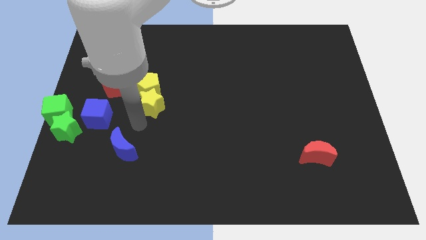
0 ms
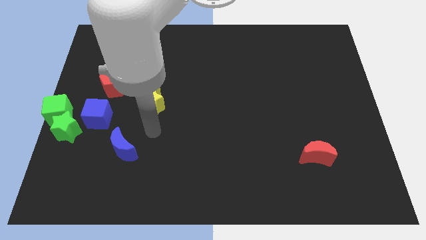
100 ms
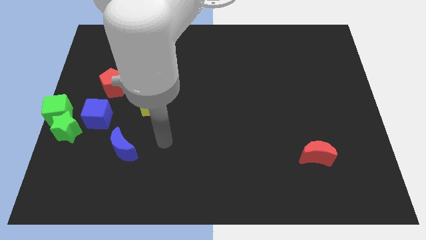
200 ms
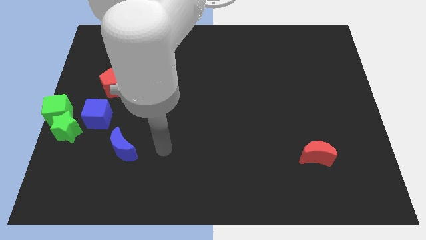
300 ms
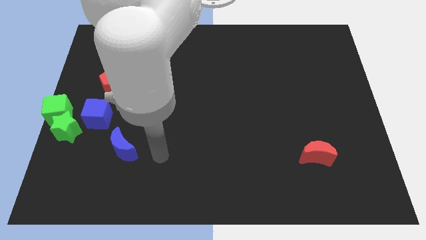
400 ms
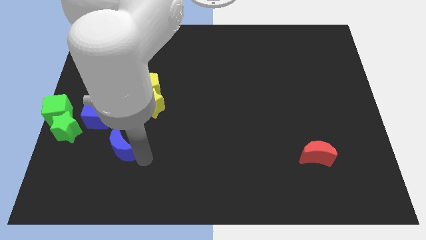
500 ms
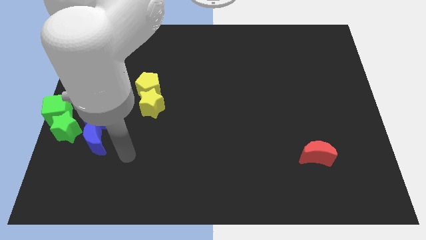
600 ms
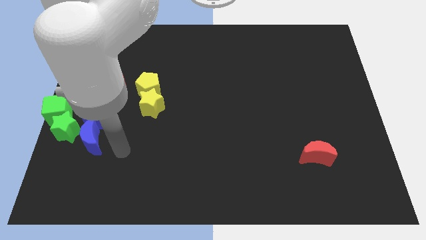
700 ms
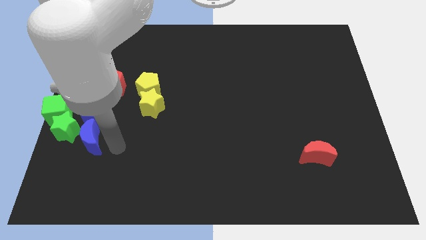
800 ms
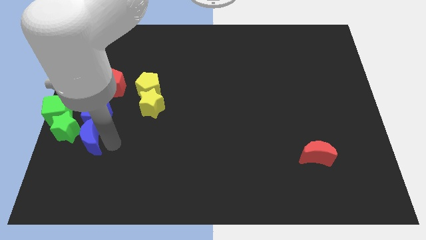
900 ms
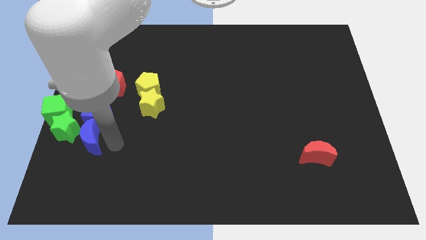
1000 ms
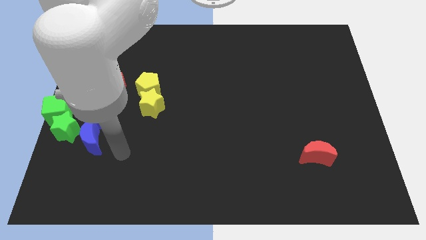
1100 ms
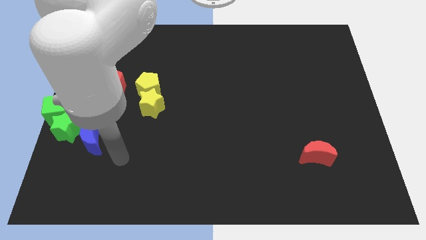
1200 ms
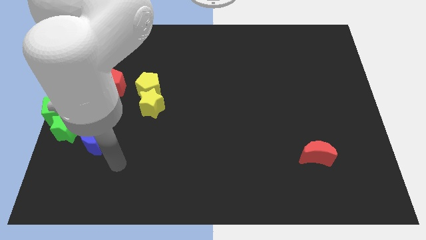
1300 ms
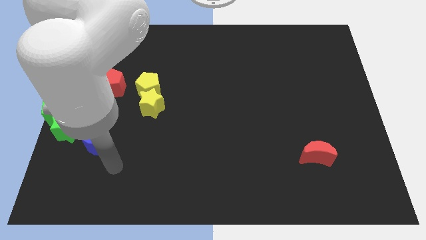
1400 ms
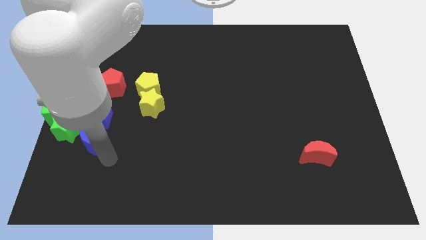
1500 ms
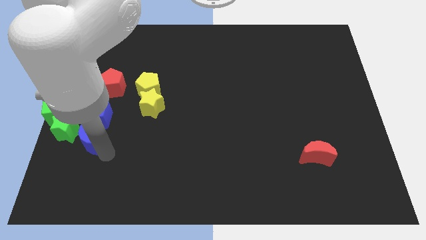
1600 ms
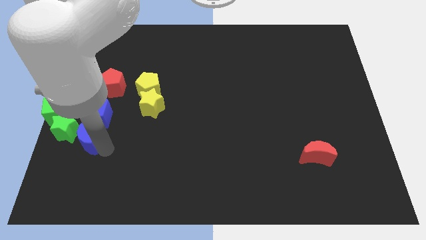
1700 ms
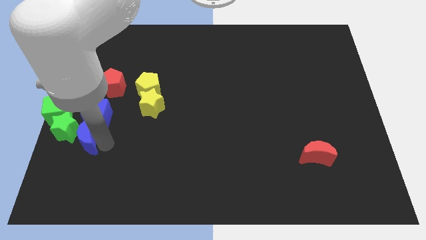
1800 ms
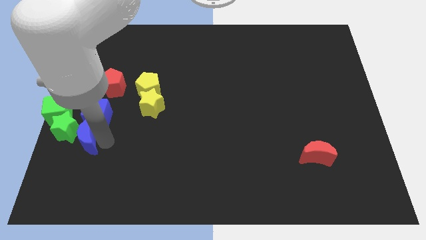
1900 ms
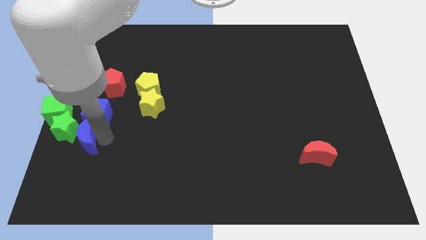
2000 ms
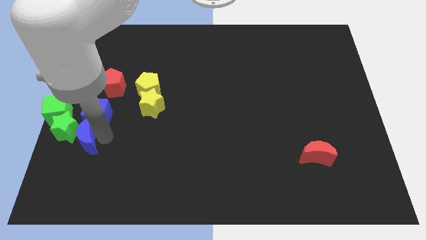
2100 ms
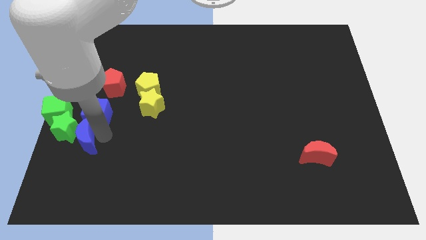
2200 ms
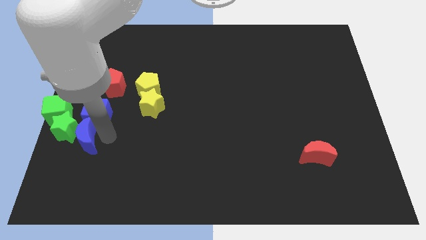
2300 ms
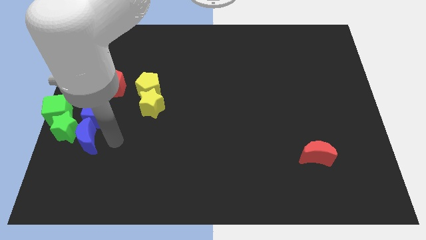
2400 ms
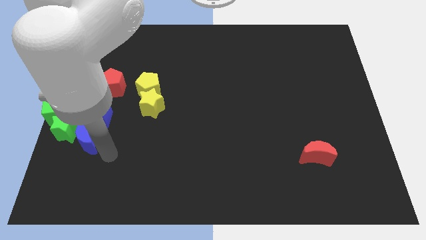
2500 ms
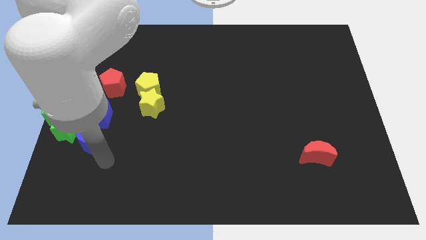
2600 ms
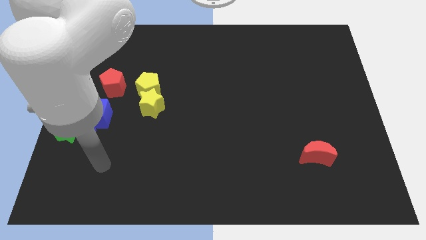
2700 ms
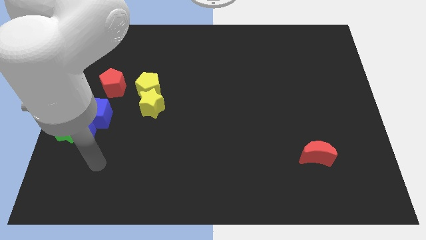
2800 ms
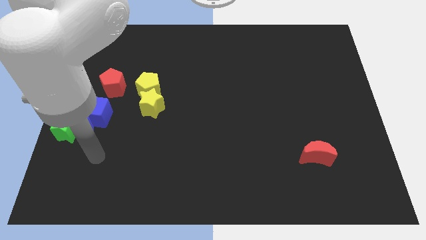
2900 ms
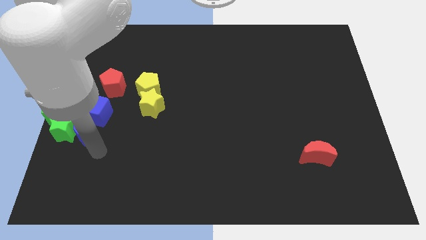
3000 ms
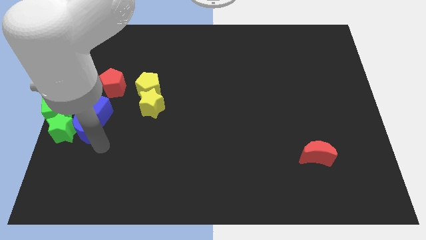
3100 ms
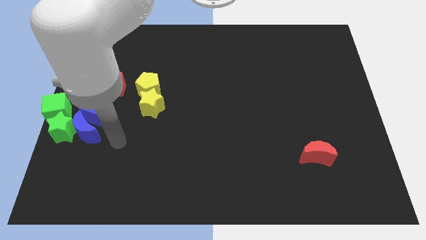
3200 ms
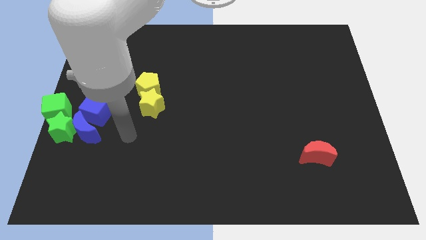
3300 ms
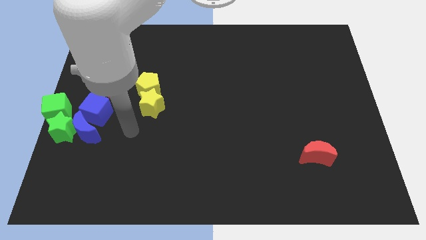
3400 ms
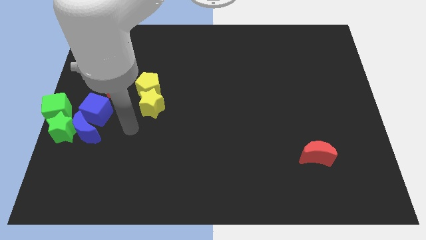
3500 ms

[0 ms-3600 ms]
push the blue moon into green star

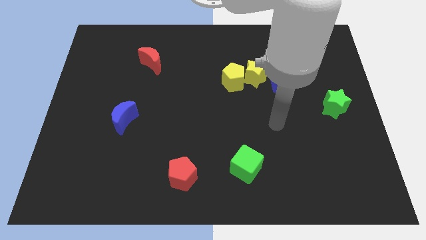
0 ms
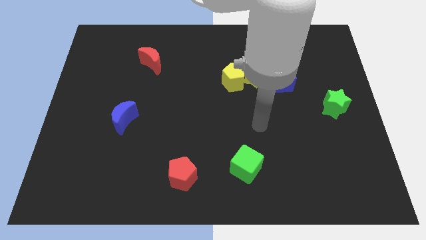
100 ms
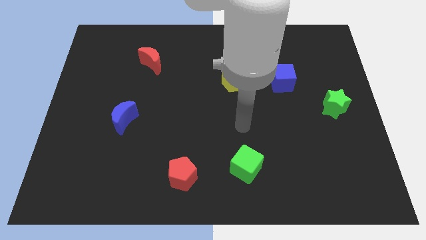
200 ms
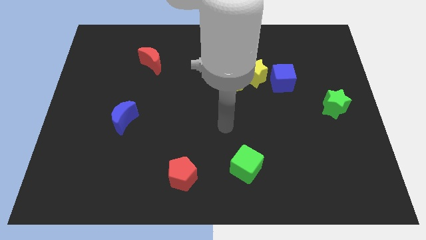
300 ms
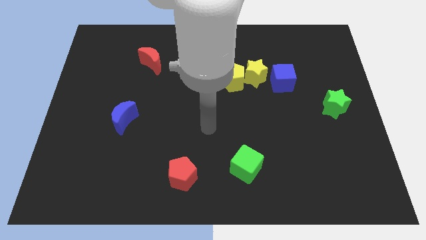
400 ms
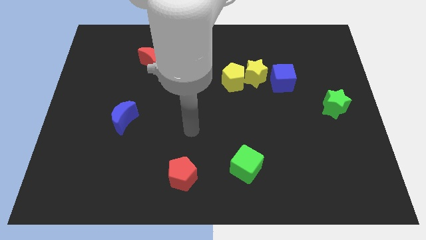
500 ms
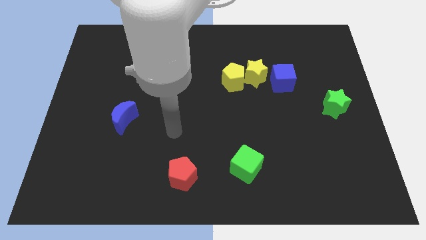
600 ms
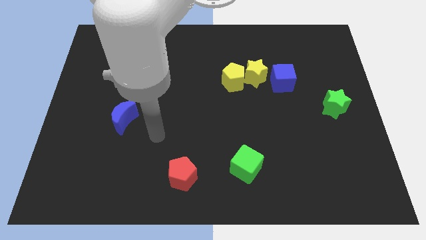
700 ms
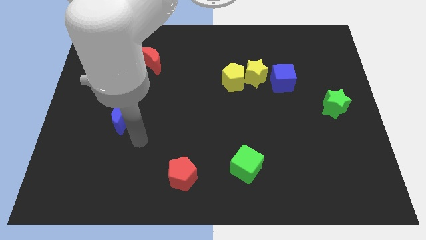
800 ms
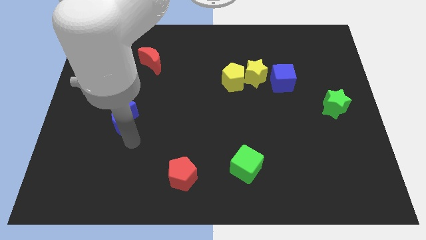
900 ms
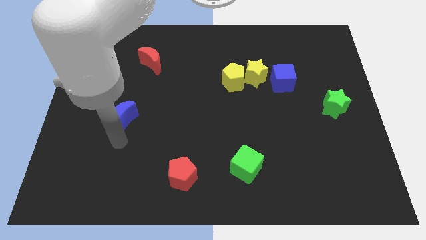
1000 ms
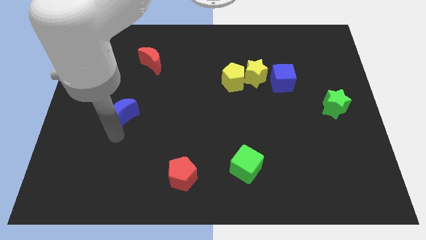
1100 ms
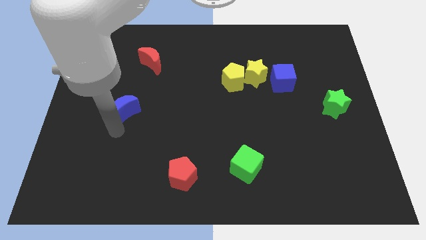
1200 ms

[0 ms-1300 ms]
touch the blue crescent with your arm

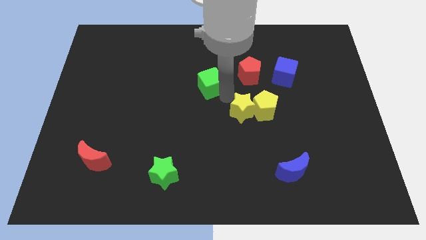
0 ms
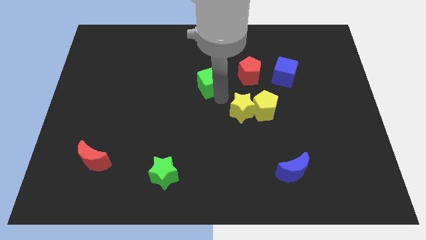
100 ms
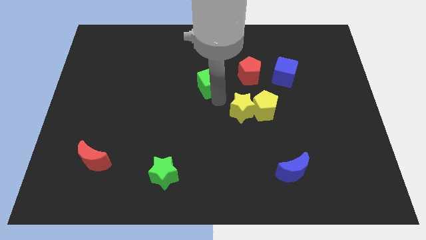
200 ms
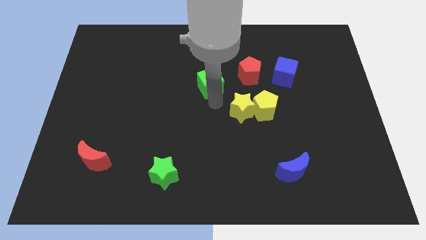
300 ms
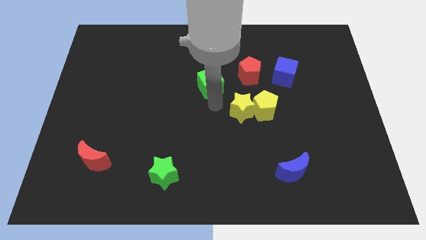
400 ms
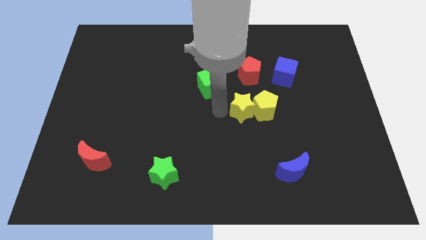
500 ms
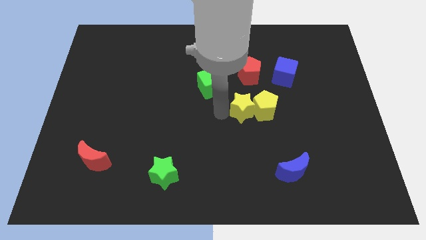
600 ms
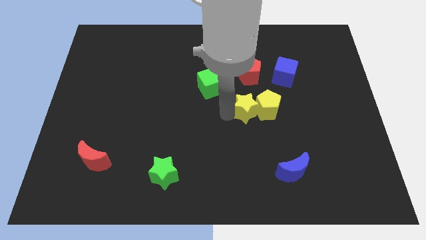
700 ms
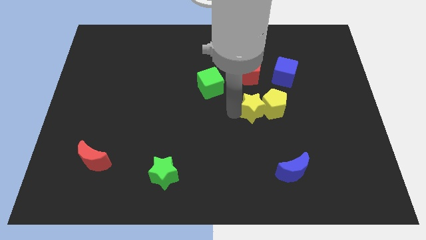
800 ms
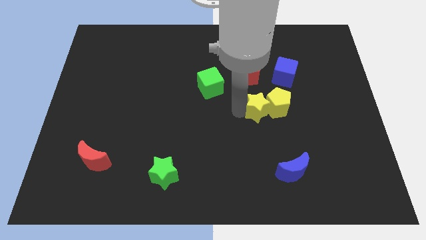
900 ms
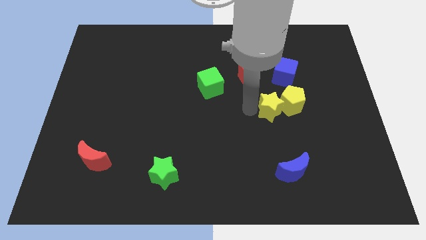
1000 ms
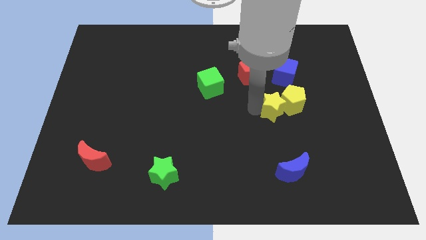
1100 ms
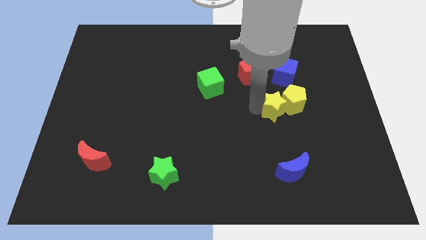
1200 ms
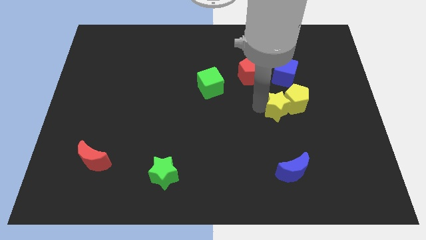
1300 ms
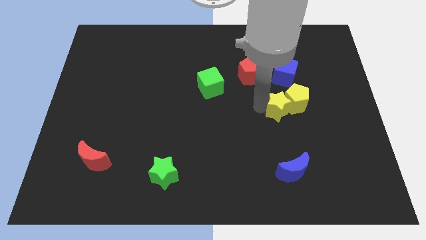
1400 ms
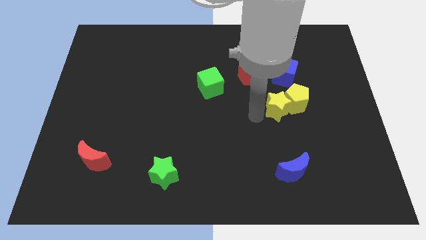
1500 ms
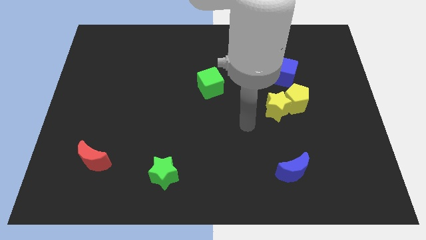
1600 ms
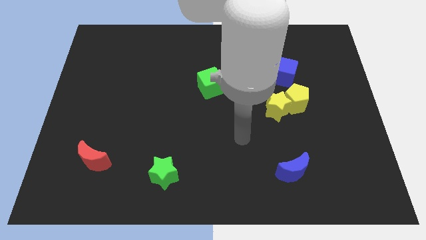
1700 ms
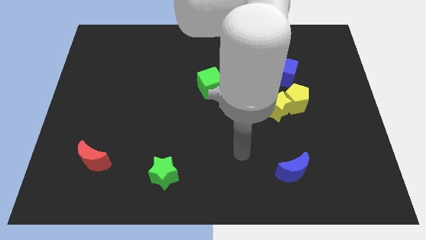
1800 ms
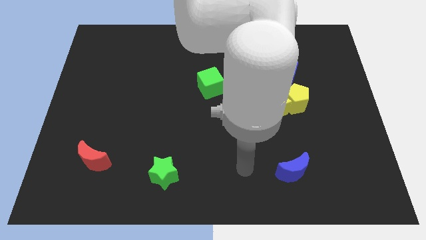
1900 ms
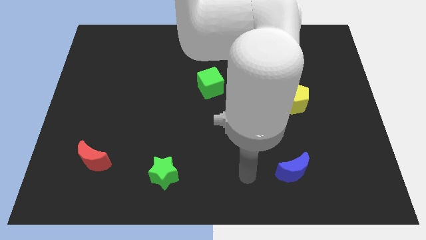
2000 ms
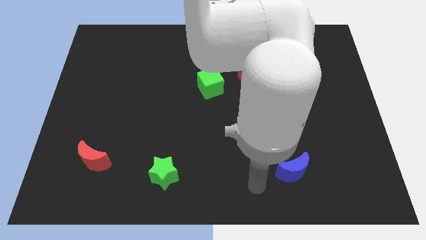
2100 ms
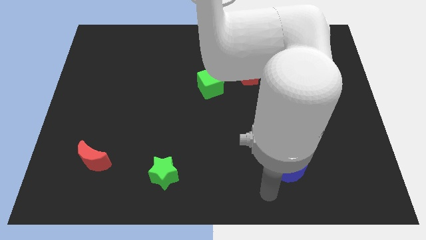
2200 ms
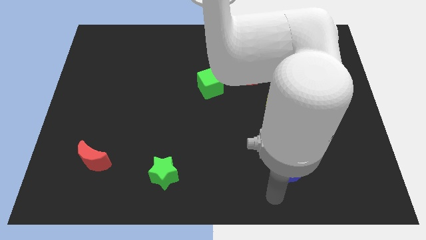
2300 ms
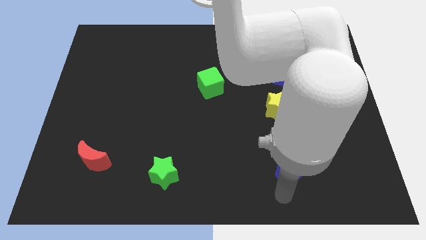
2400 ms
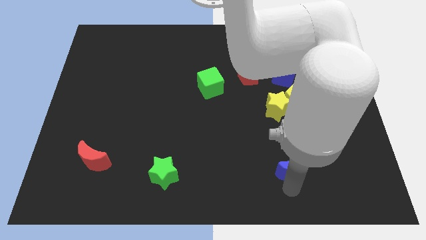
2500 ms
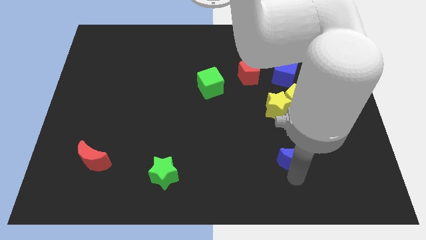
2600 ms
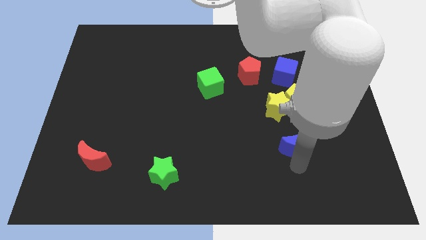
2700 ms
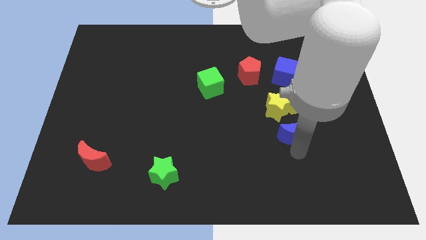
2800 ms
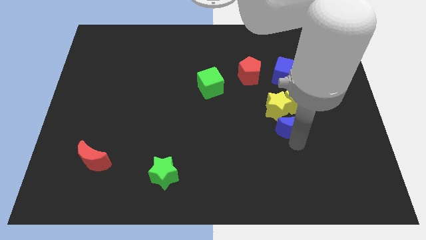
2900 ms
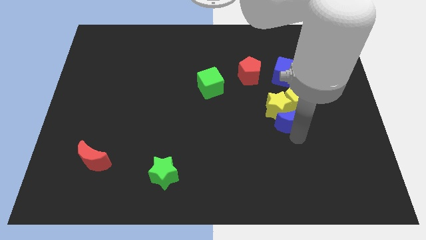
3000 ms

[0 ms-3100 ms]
slide the blue crescent towards the bottom of the yellow blocks

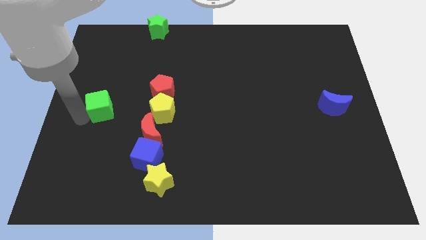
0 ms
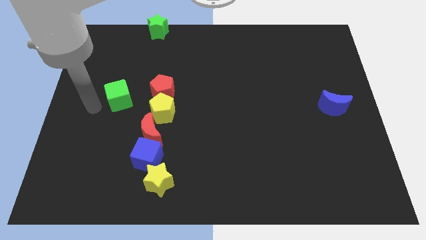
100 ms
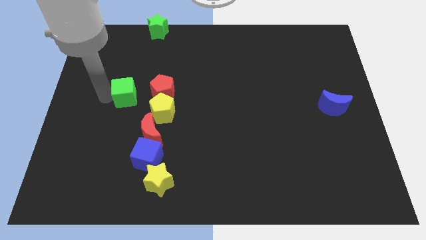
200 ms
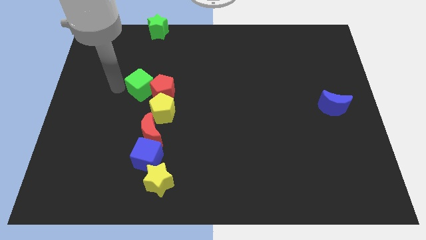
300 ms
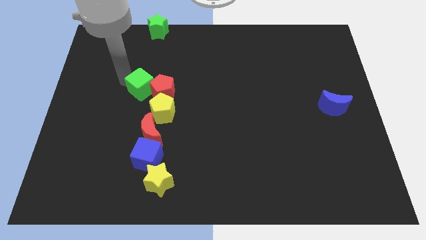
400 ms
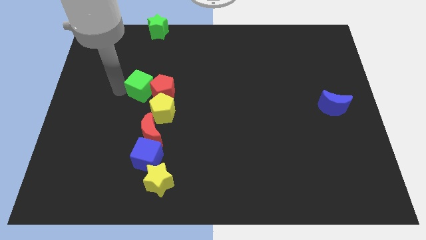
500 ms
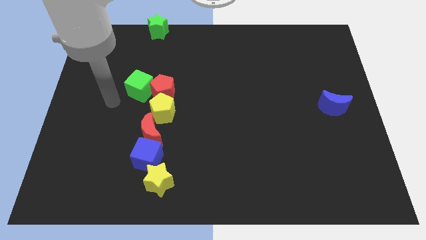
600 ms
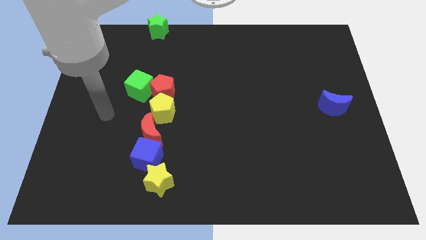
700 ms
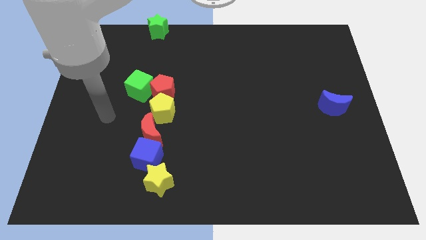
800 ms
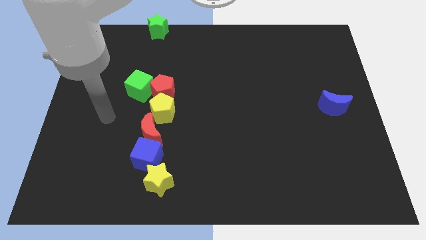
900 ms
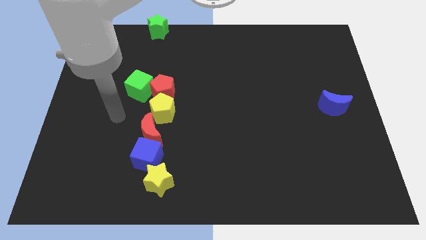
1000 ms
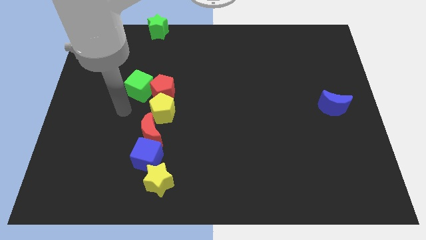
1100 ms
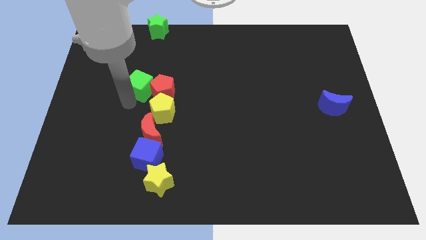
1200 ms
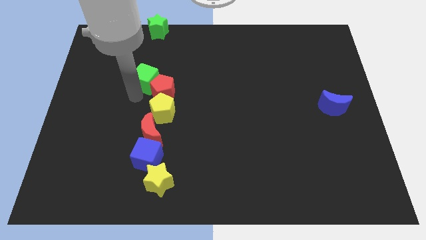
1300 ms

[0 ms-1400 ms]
slide the green cube into the red pentagon
